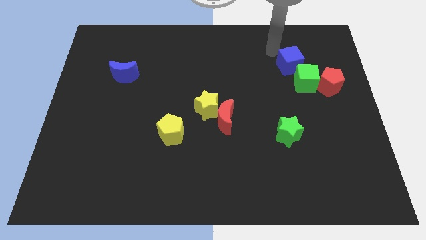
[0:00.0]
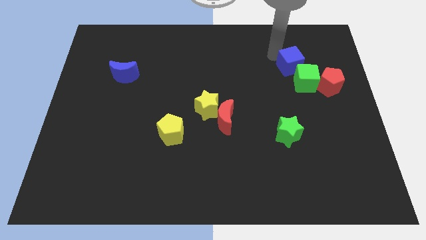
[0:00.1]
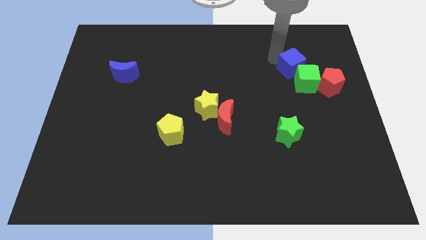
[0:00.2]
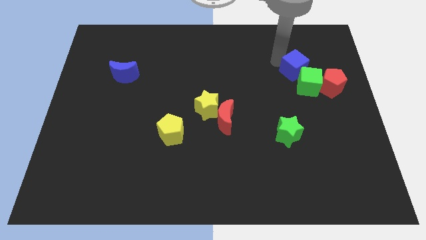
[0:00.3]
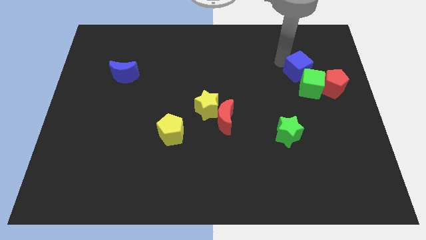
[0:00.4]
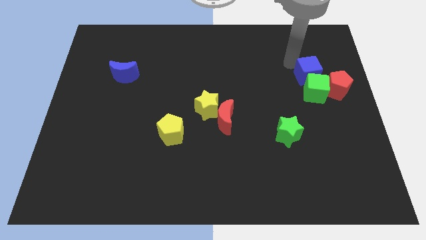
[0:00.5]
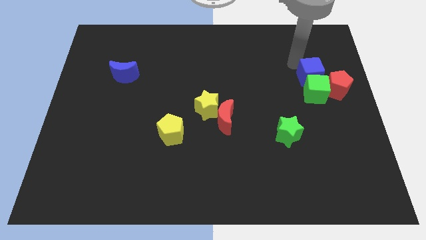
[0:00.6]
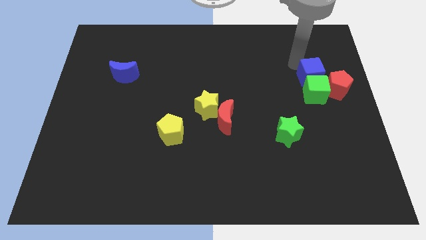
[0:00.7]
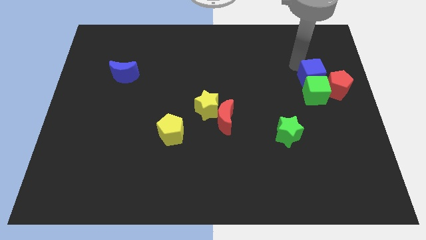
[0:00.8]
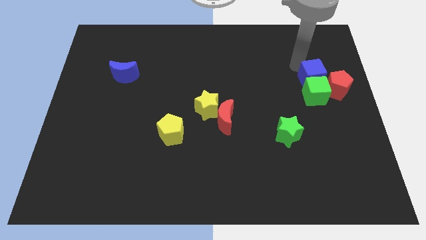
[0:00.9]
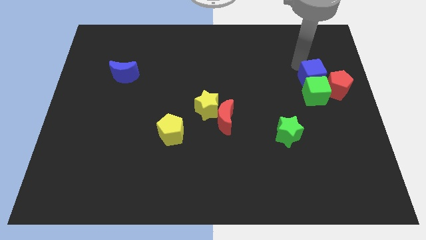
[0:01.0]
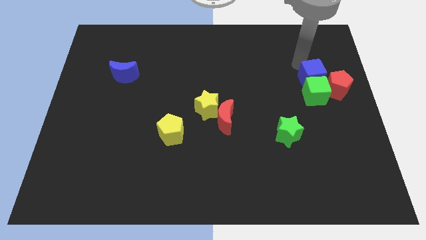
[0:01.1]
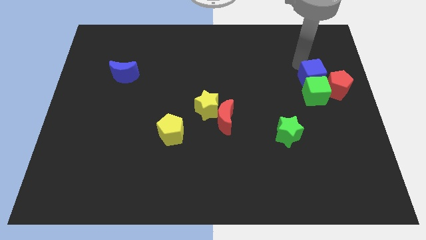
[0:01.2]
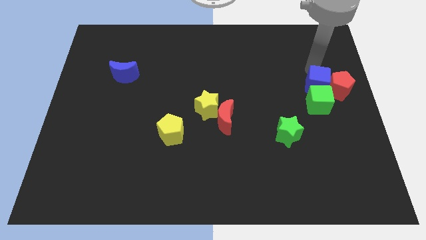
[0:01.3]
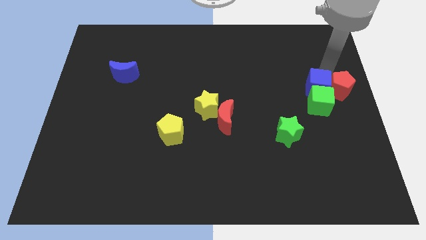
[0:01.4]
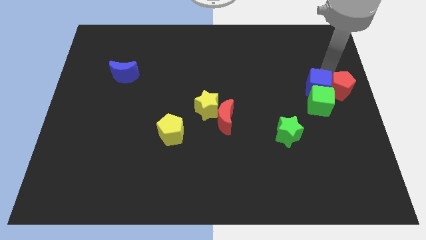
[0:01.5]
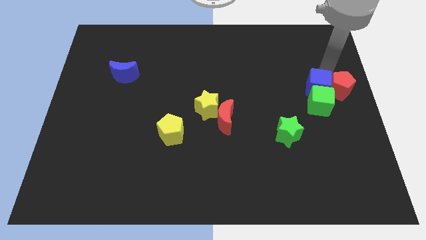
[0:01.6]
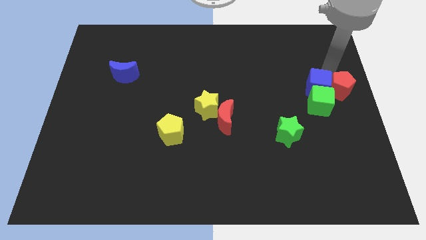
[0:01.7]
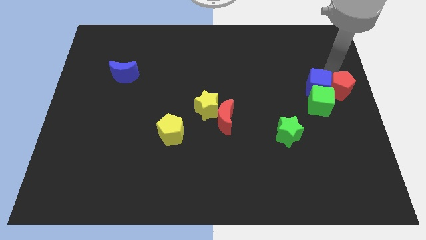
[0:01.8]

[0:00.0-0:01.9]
move blue cube into green cube

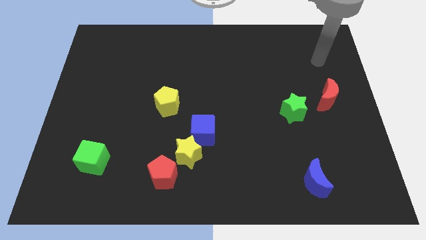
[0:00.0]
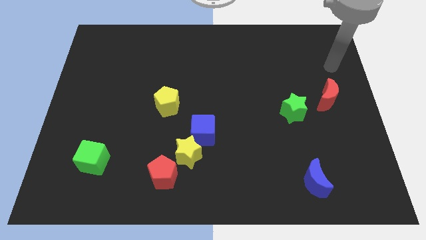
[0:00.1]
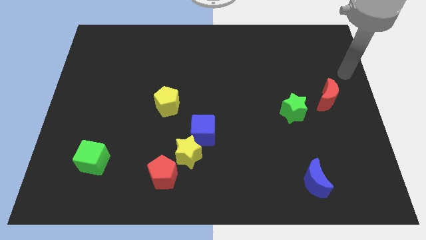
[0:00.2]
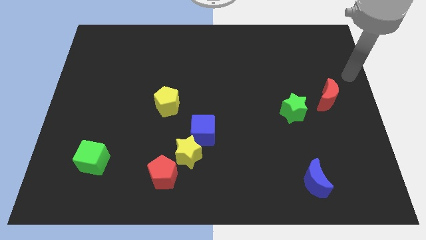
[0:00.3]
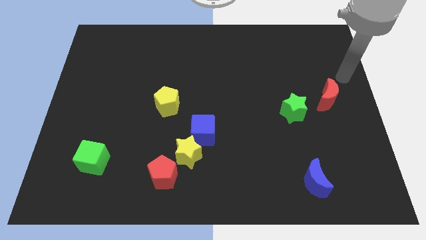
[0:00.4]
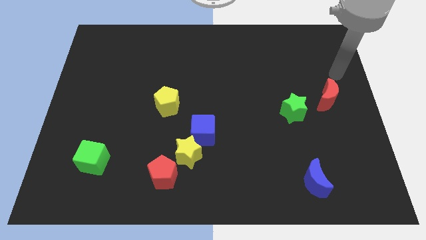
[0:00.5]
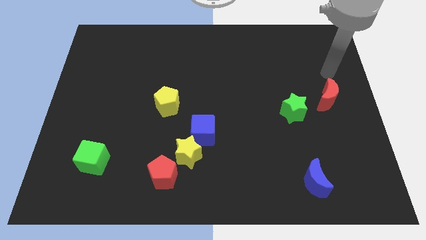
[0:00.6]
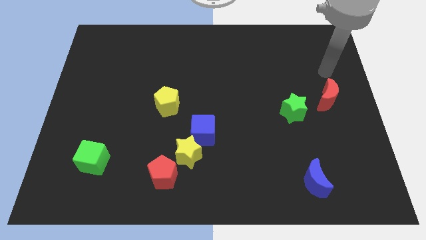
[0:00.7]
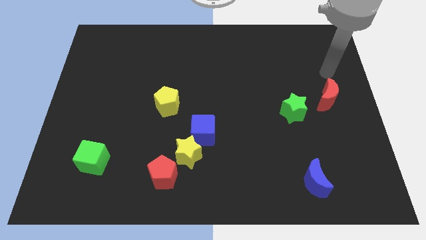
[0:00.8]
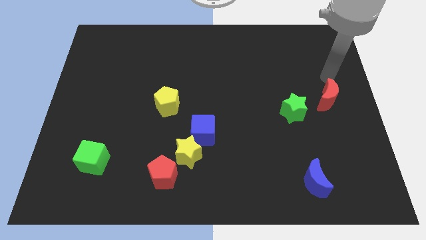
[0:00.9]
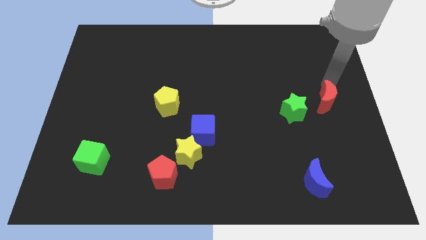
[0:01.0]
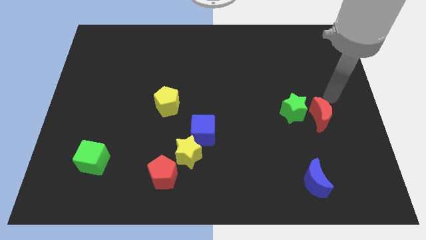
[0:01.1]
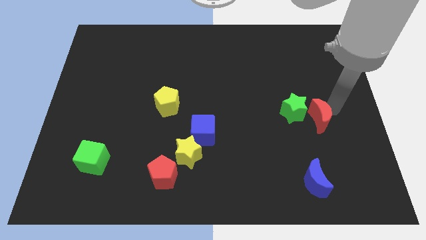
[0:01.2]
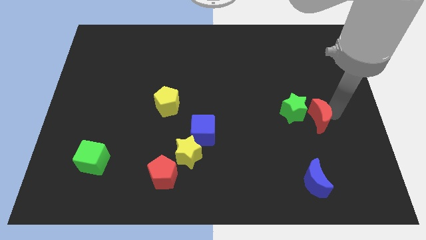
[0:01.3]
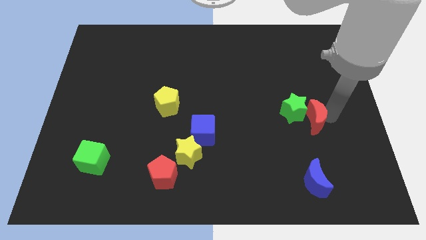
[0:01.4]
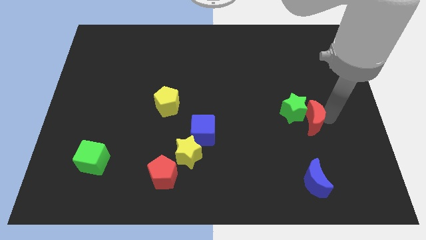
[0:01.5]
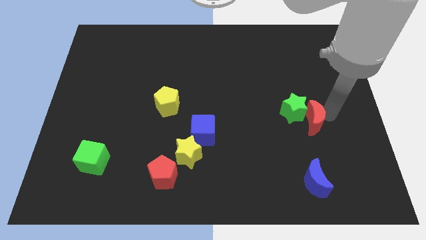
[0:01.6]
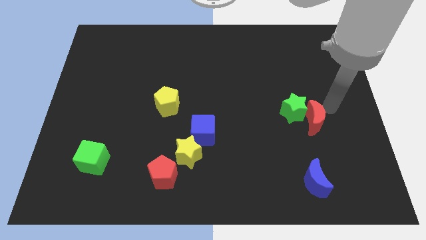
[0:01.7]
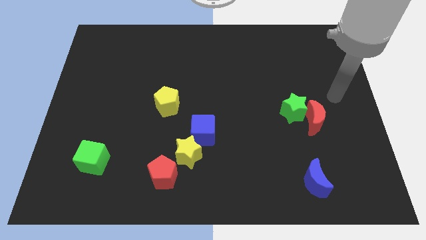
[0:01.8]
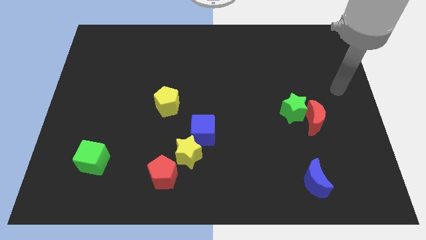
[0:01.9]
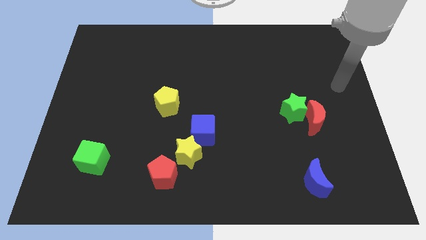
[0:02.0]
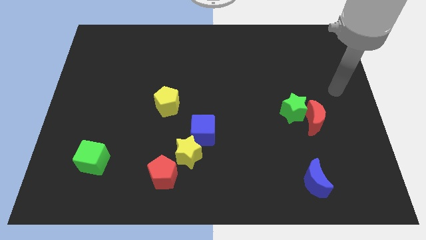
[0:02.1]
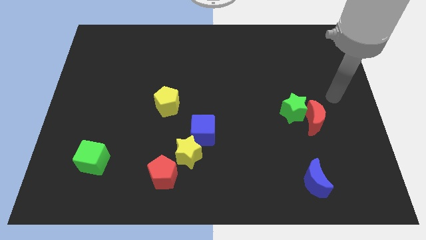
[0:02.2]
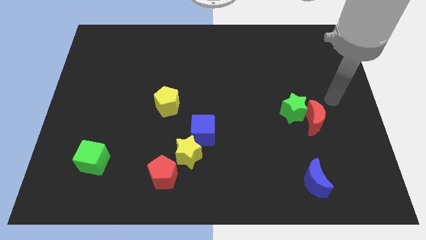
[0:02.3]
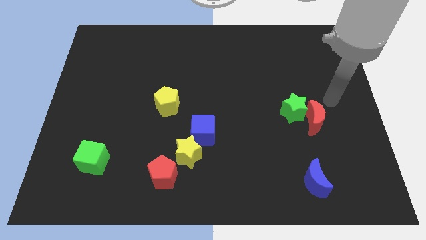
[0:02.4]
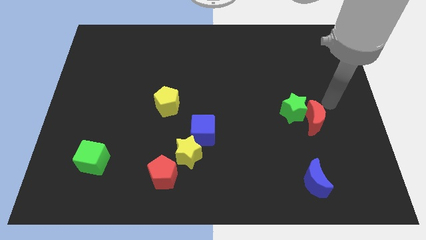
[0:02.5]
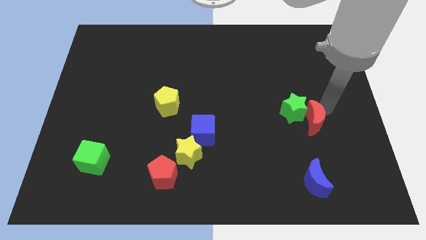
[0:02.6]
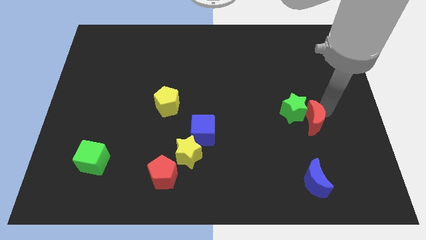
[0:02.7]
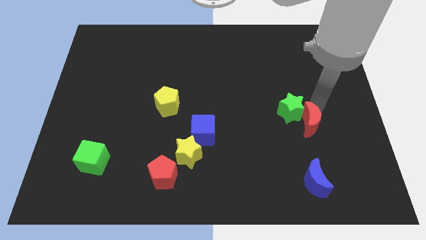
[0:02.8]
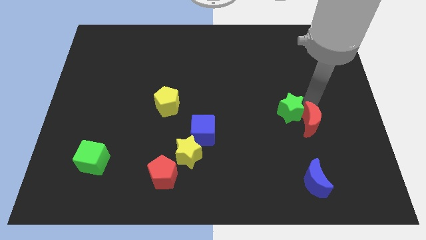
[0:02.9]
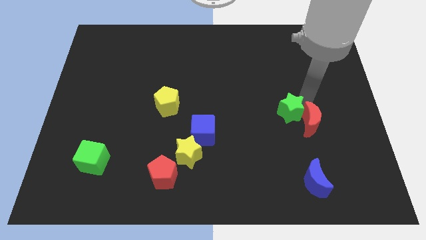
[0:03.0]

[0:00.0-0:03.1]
put red moon into the green star

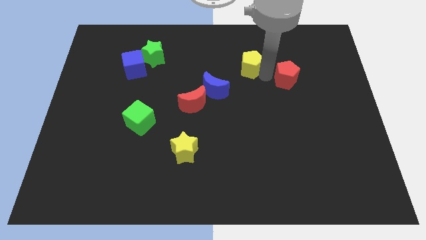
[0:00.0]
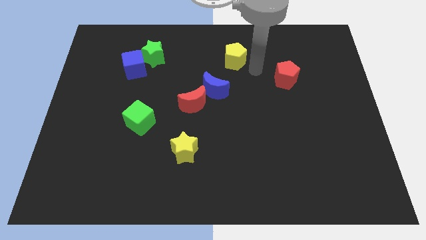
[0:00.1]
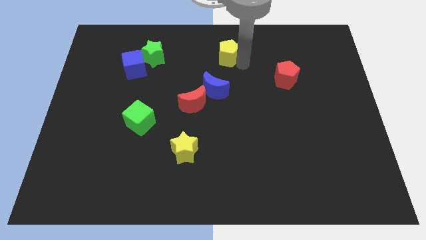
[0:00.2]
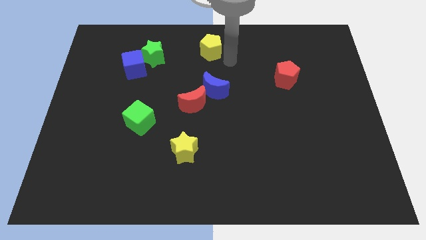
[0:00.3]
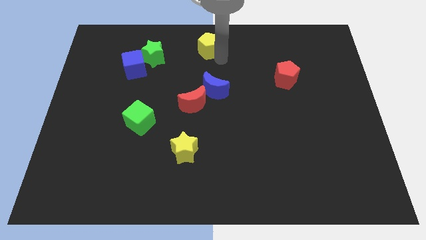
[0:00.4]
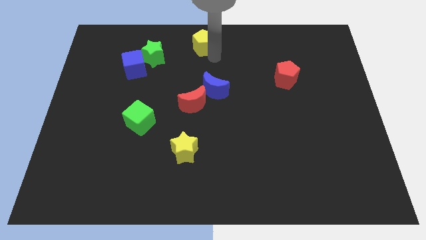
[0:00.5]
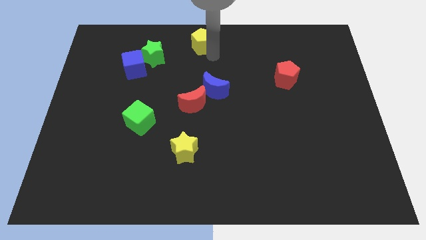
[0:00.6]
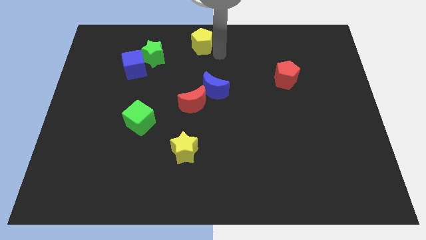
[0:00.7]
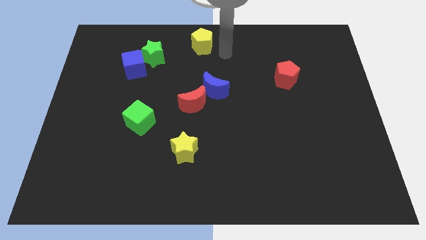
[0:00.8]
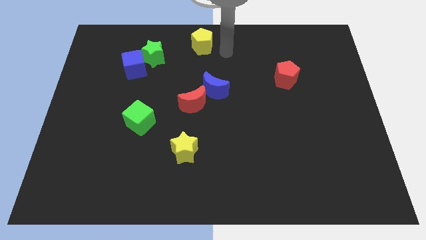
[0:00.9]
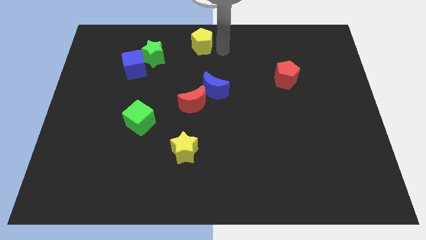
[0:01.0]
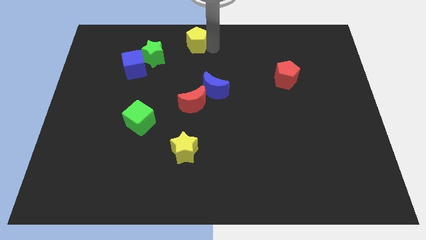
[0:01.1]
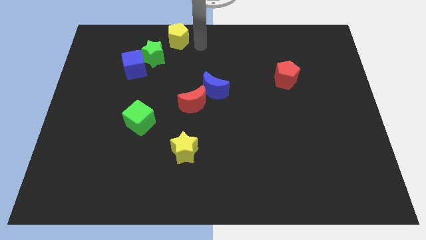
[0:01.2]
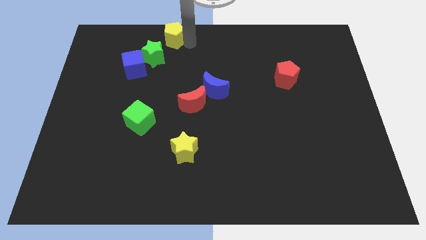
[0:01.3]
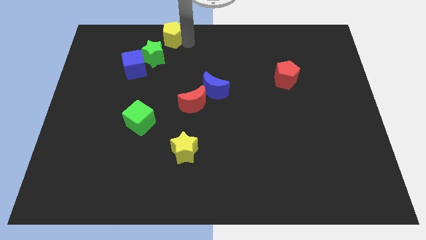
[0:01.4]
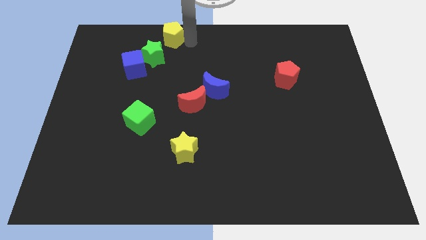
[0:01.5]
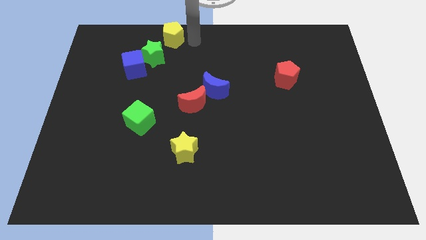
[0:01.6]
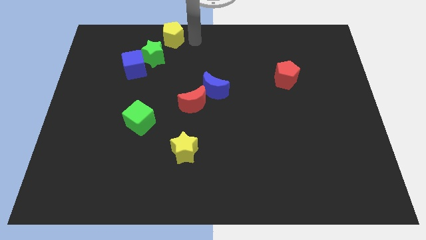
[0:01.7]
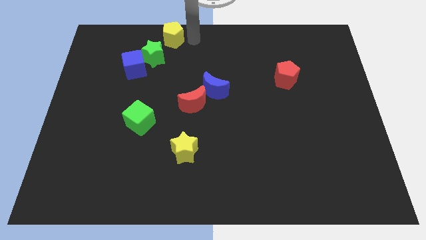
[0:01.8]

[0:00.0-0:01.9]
push the yellow pentagon diagonally to the top right of the green star

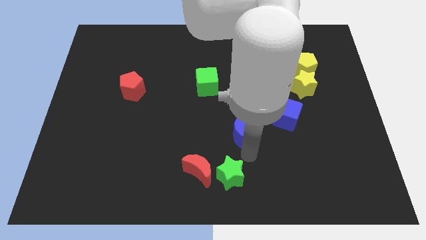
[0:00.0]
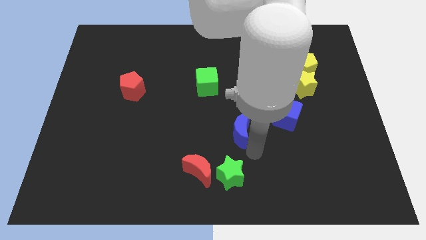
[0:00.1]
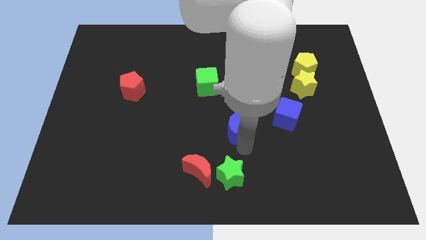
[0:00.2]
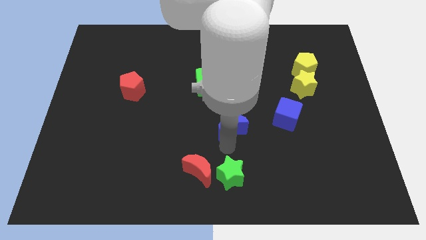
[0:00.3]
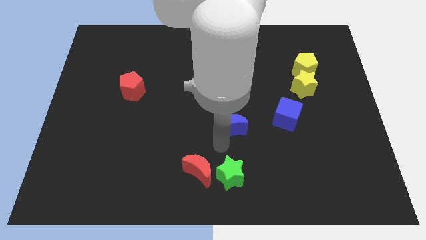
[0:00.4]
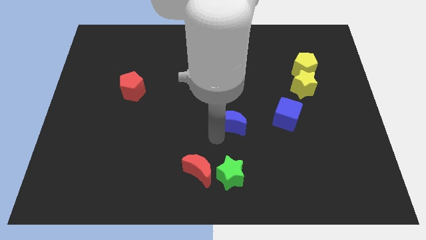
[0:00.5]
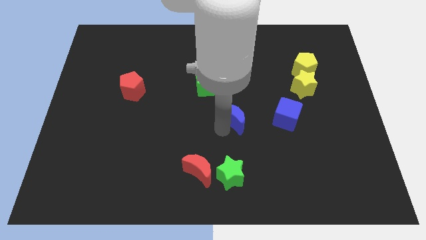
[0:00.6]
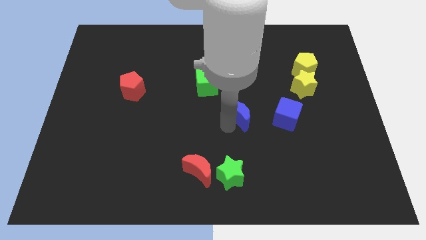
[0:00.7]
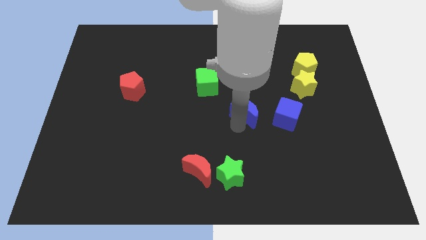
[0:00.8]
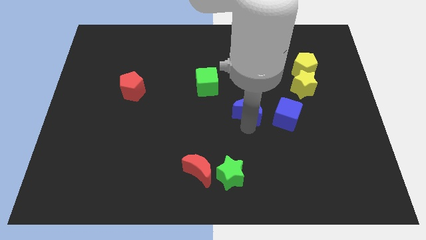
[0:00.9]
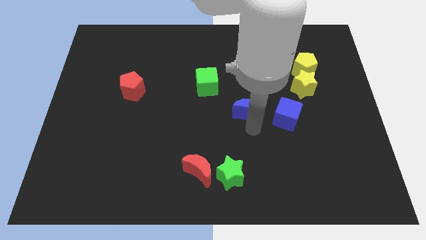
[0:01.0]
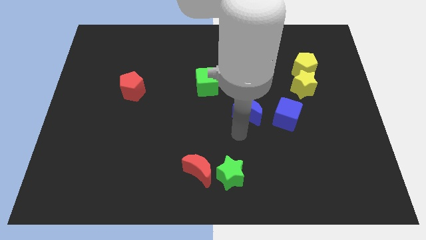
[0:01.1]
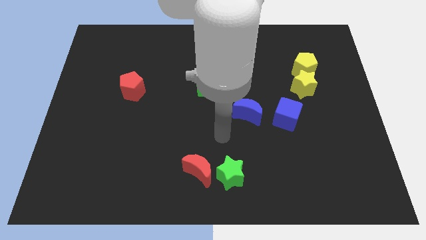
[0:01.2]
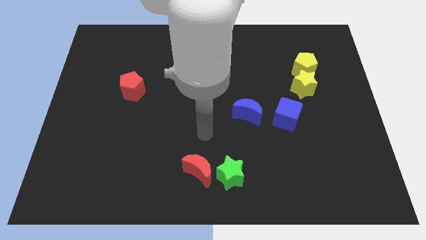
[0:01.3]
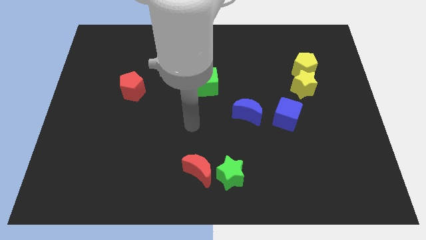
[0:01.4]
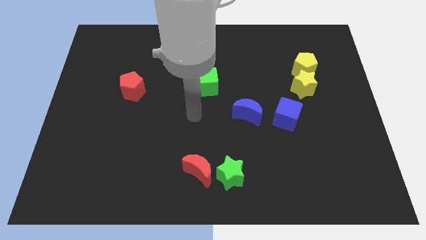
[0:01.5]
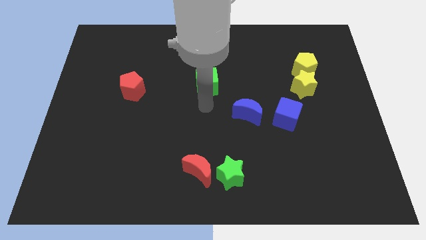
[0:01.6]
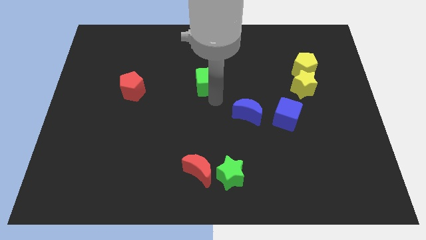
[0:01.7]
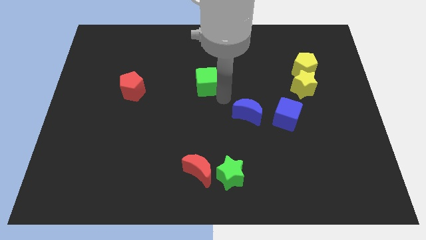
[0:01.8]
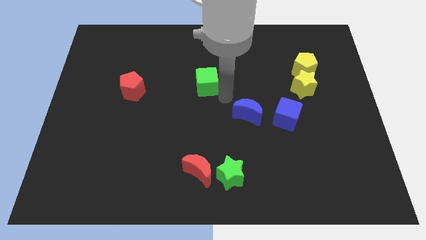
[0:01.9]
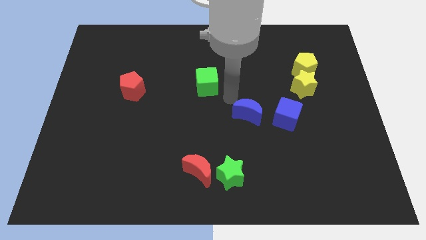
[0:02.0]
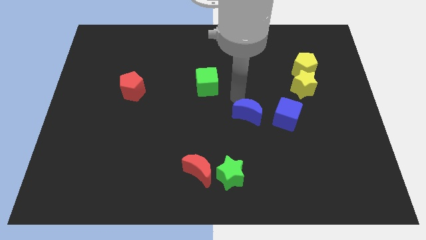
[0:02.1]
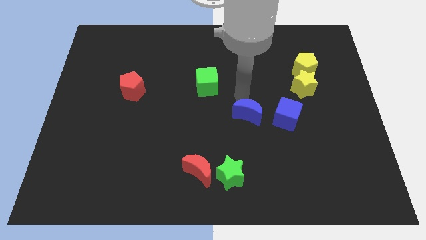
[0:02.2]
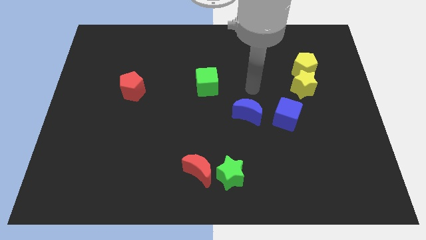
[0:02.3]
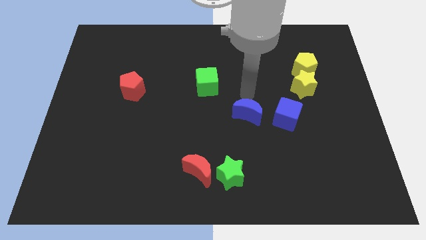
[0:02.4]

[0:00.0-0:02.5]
place blue moon to the left of blue cube
